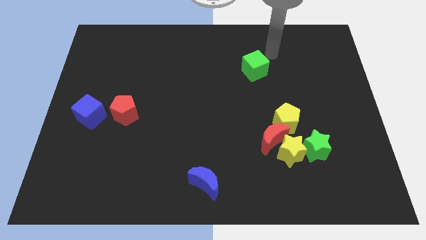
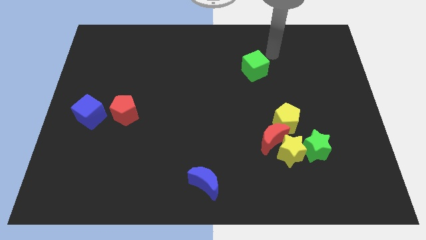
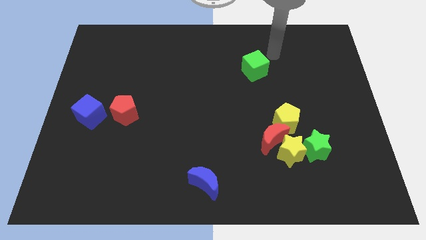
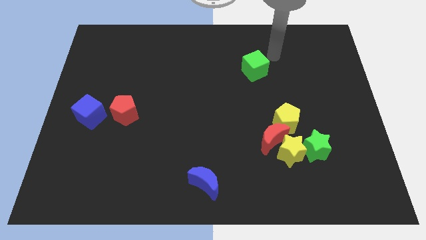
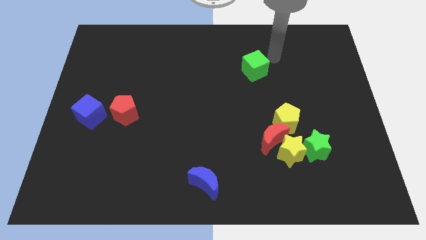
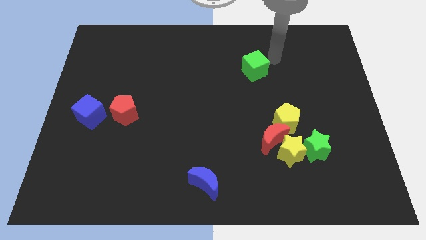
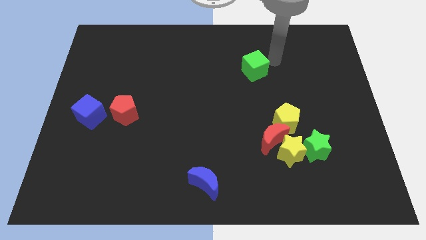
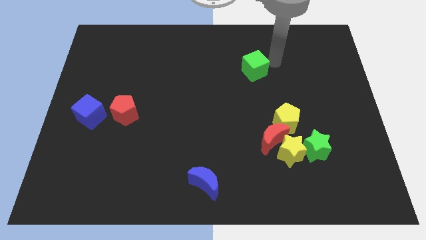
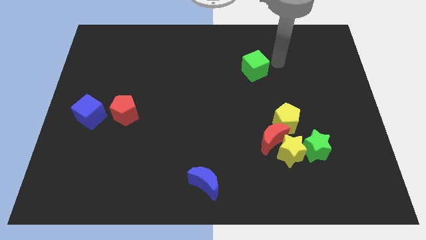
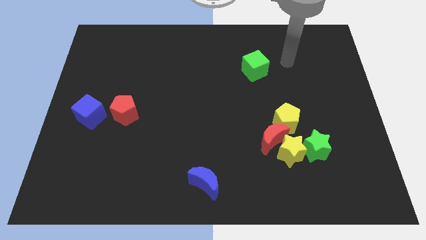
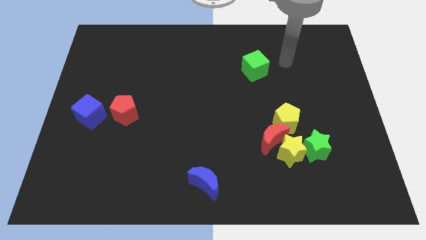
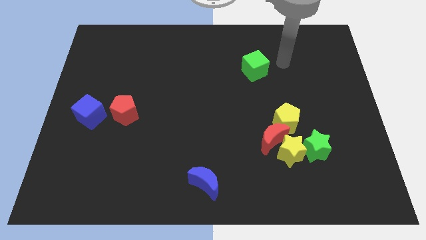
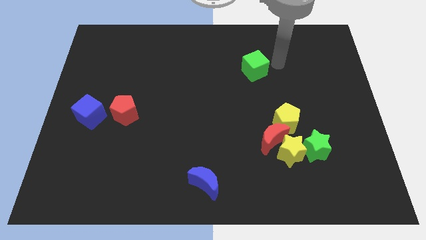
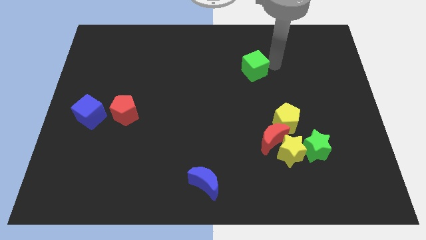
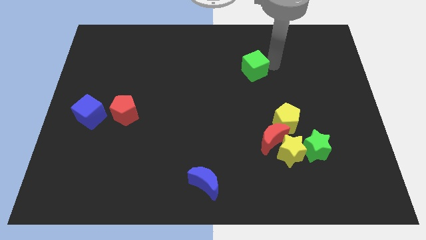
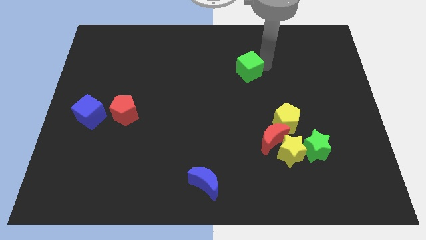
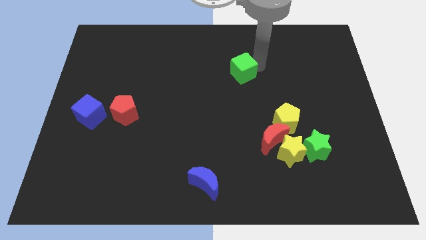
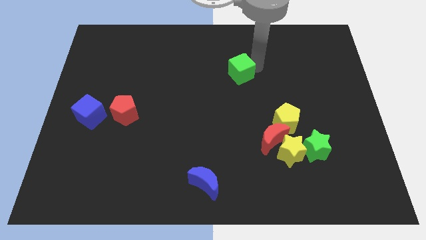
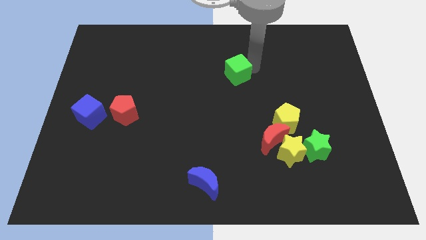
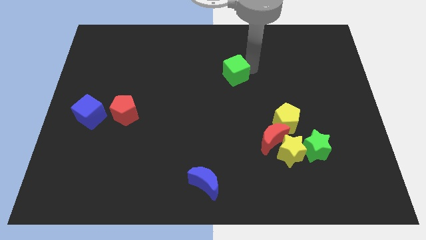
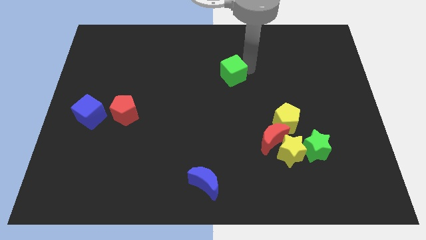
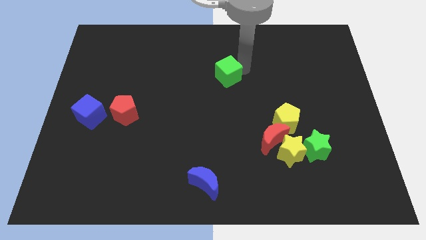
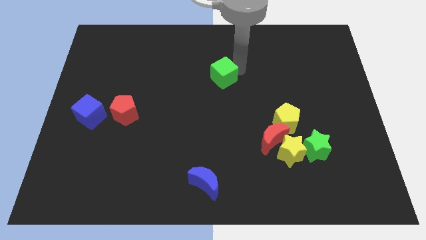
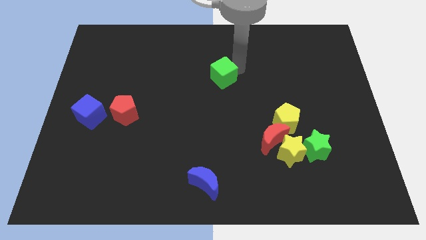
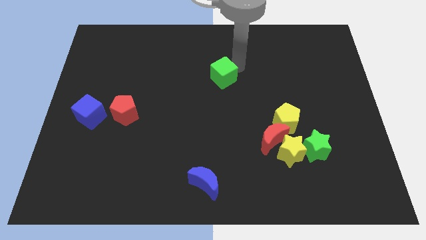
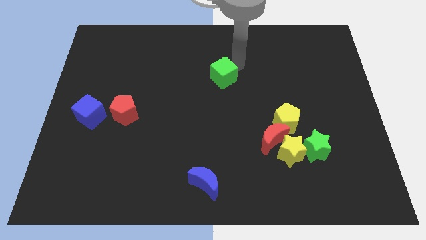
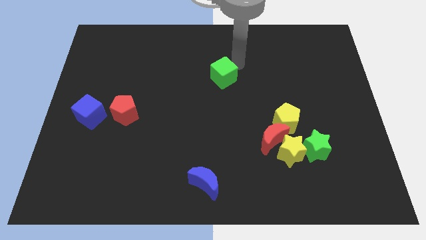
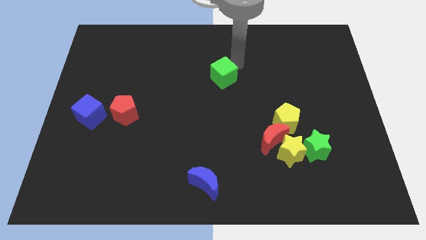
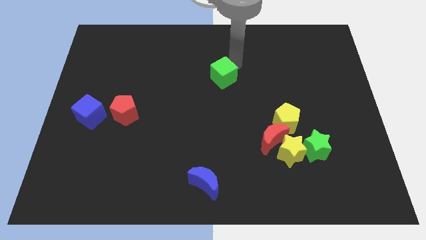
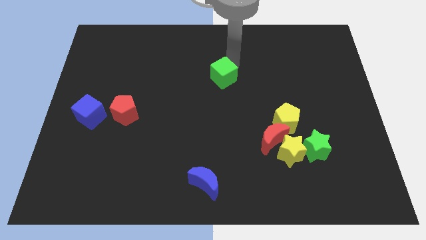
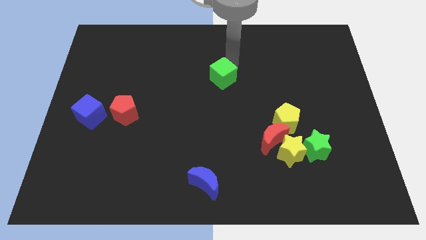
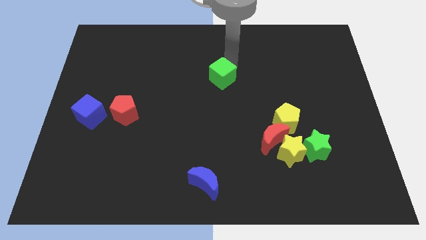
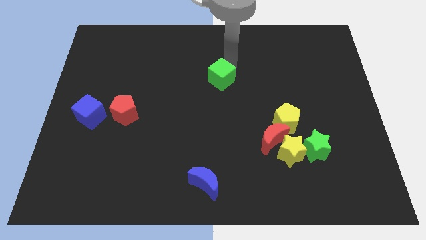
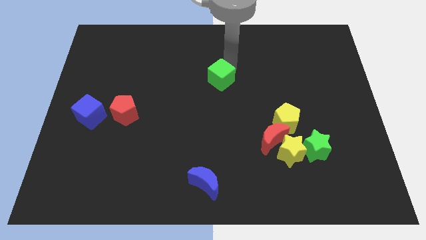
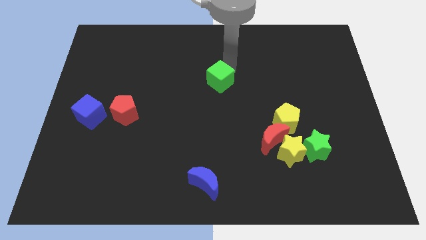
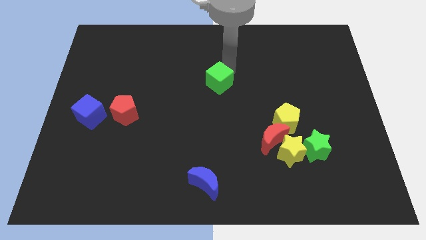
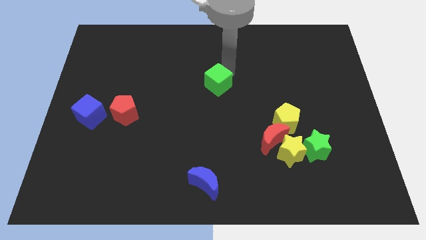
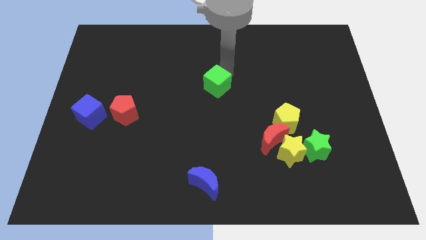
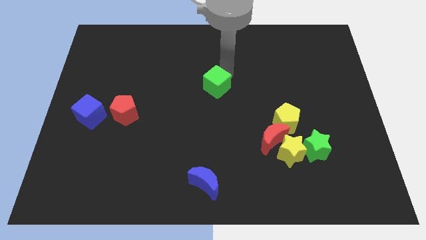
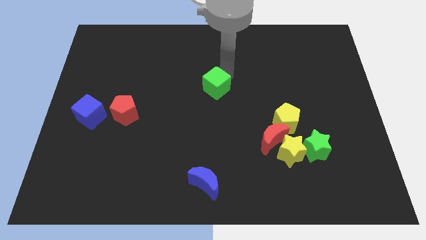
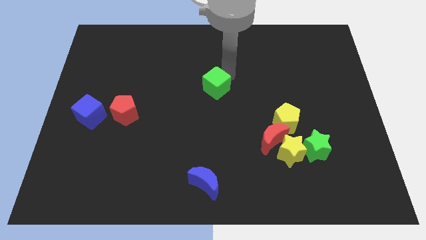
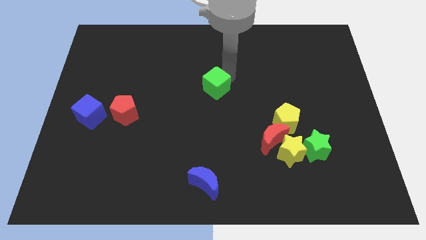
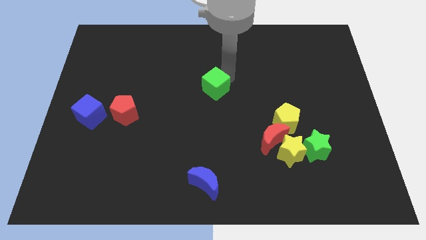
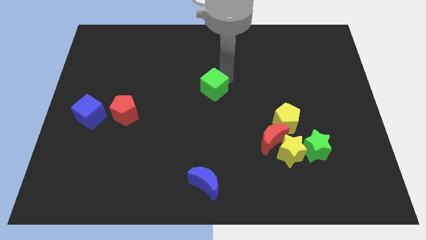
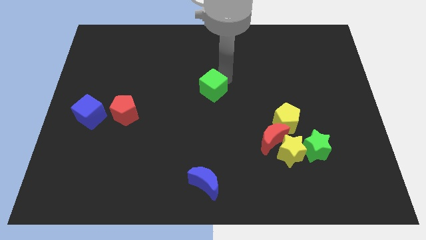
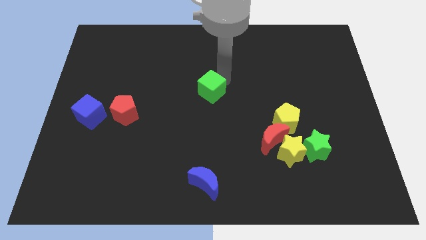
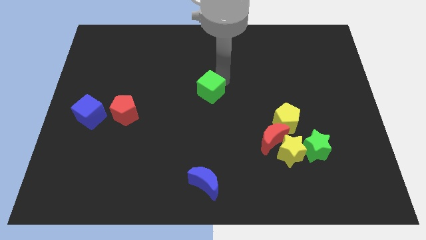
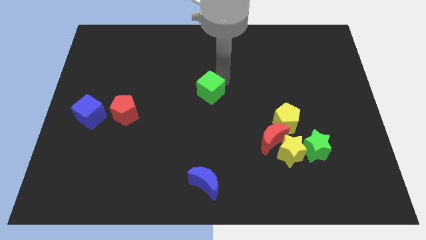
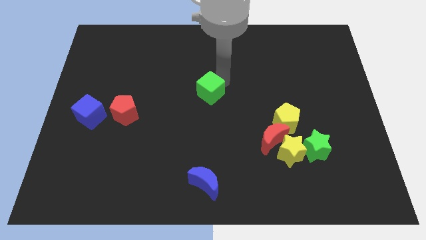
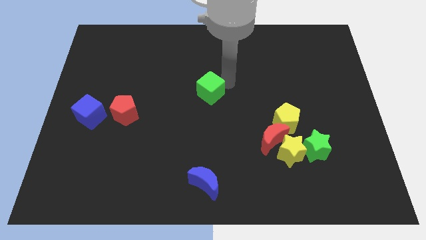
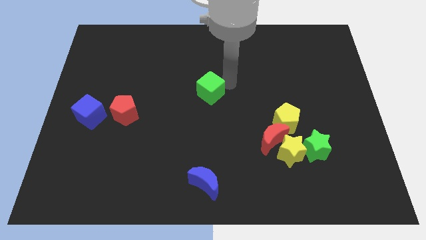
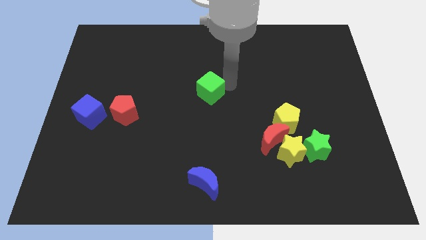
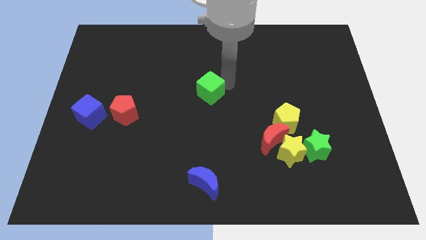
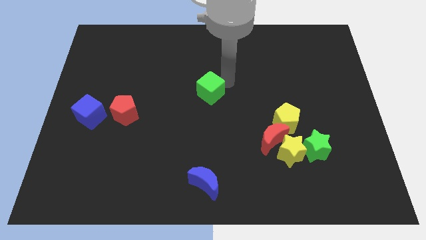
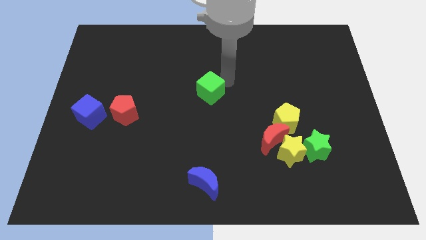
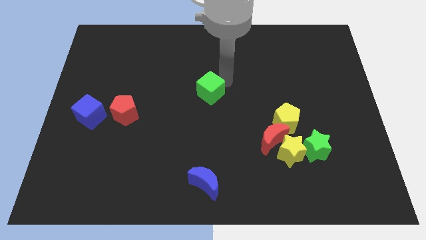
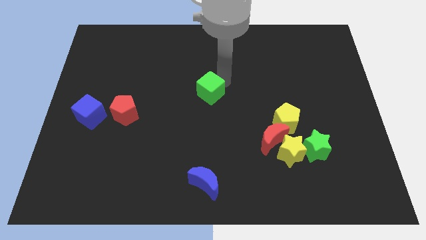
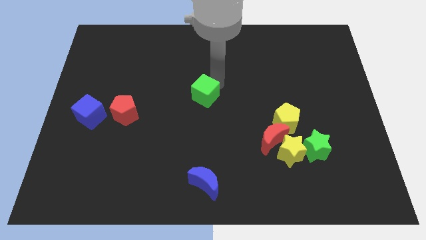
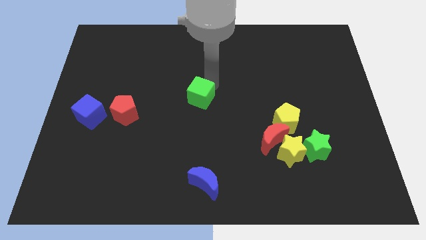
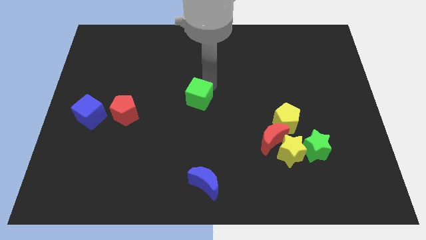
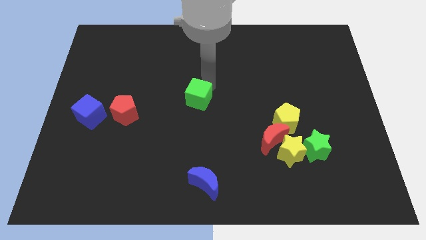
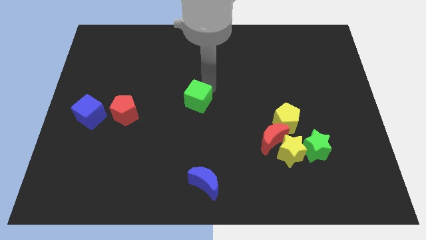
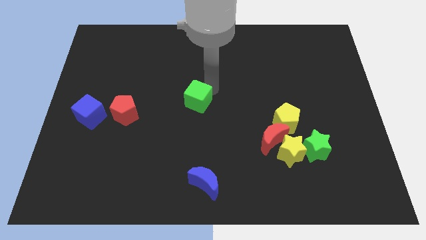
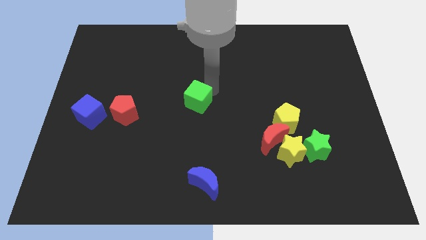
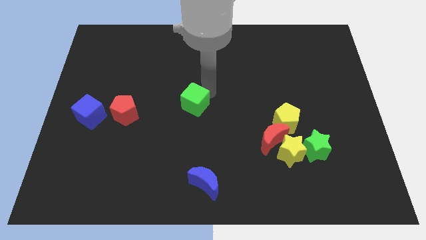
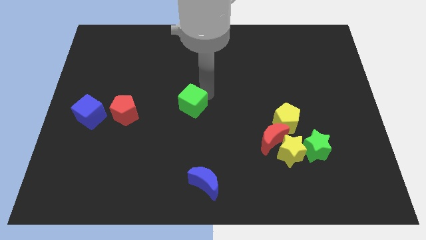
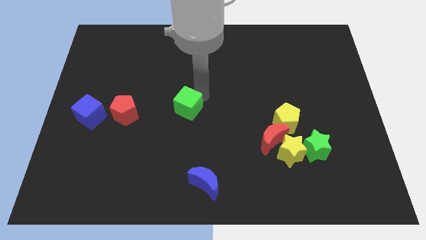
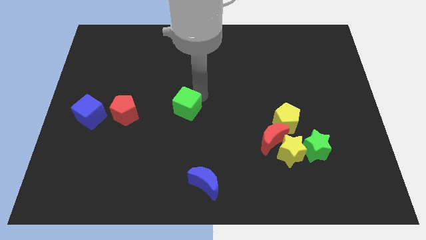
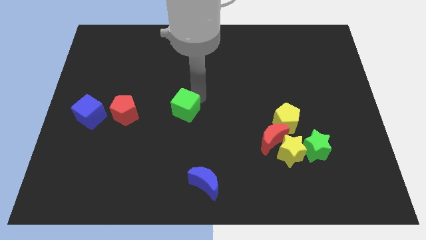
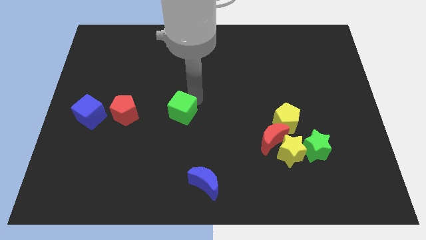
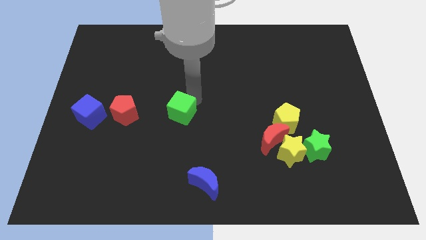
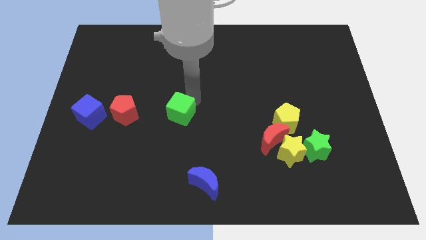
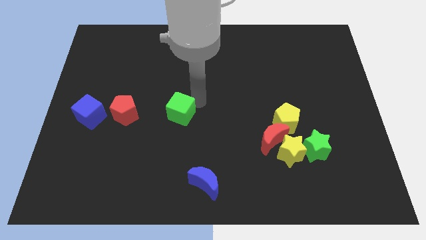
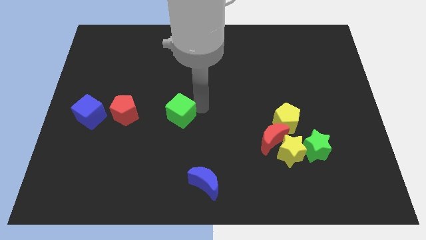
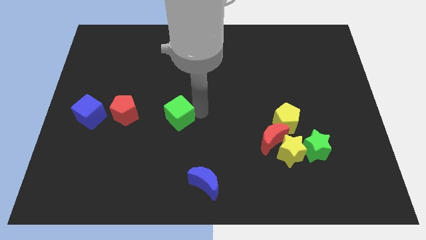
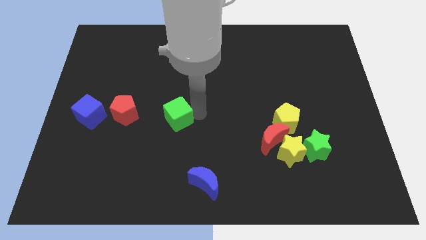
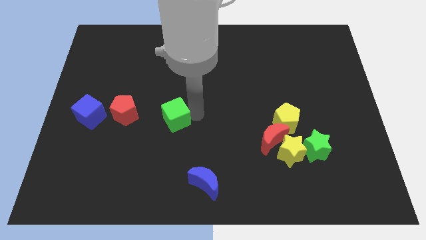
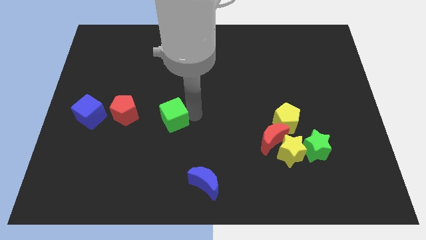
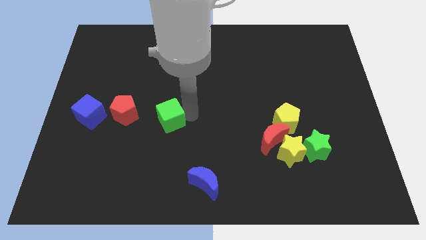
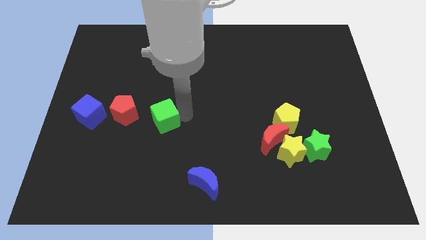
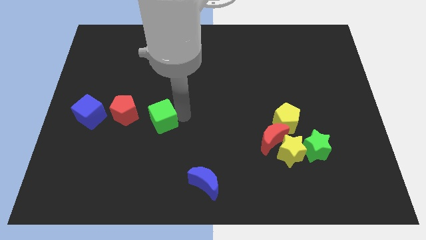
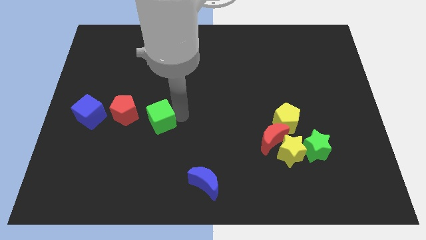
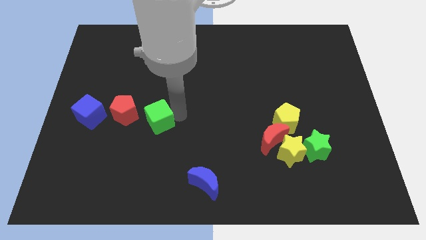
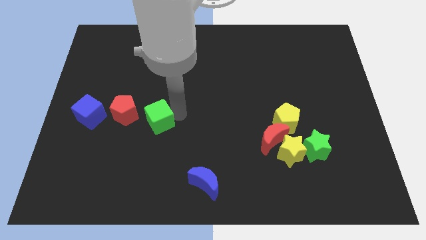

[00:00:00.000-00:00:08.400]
place green cube beside red pentagon

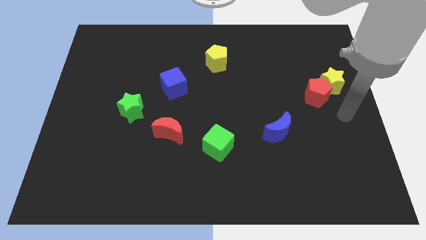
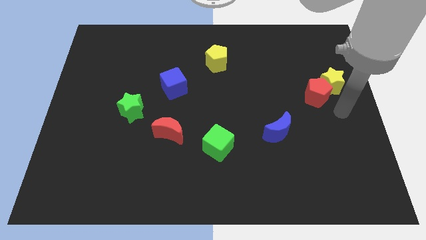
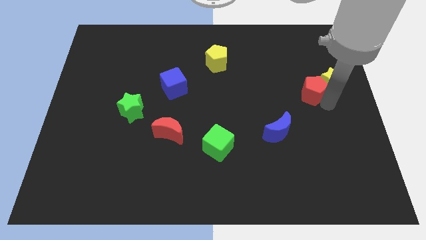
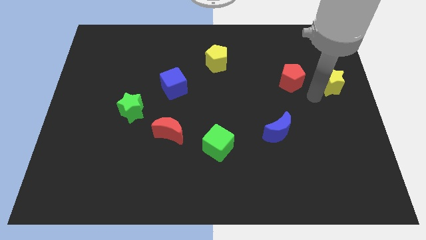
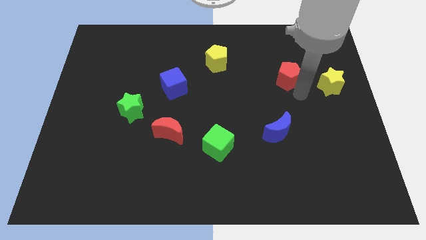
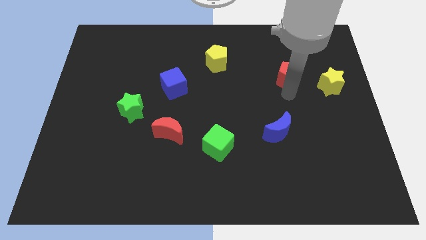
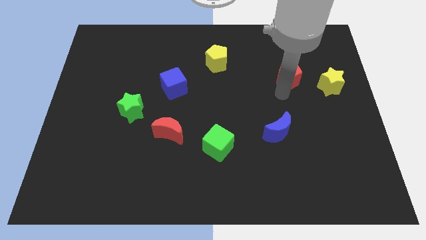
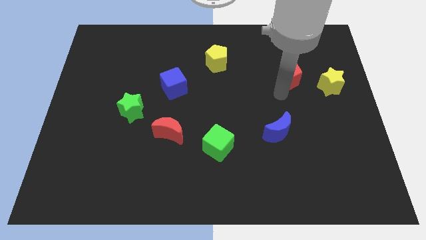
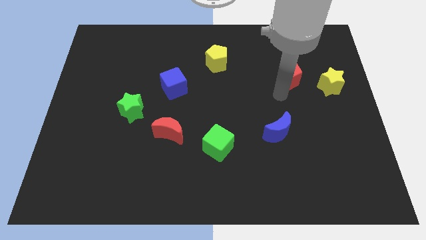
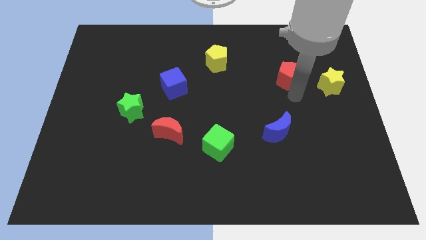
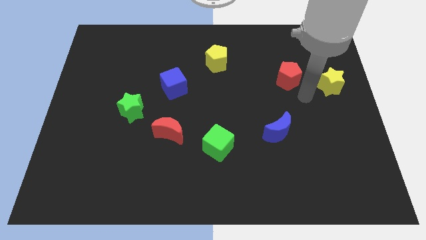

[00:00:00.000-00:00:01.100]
separate the red pentagon from the yellow star
